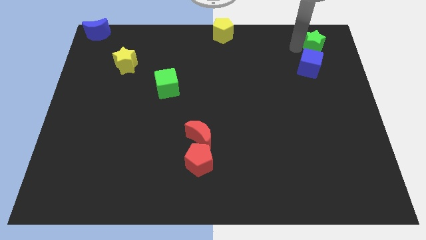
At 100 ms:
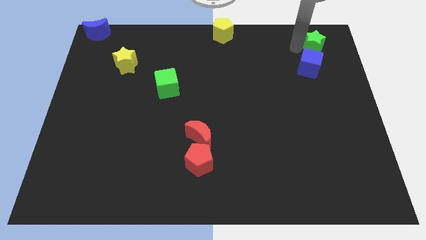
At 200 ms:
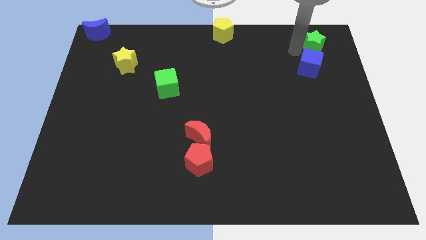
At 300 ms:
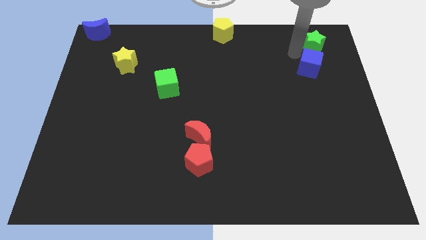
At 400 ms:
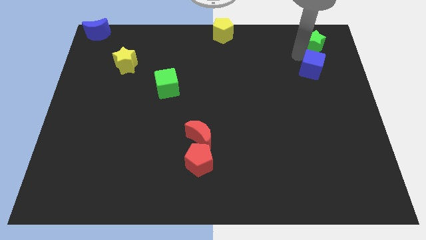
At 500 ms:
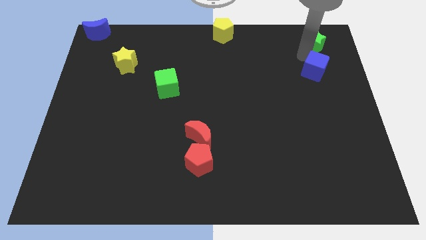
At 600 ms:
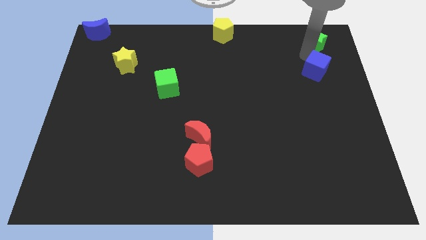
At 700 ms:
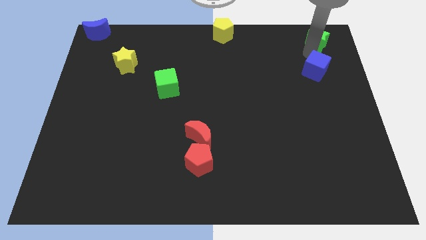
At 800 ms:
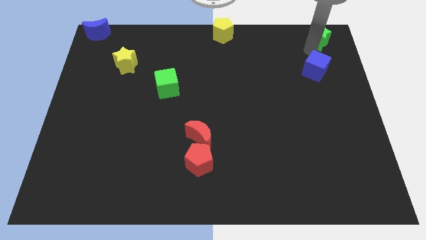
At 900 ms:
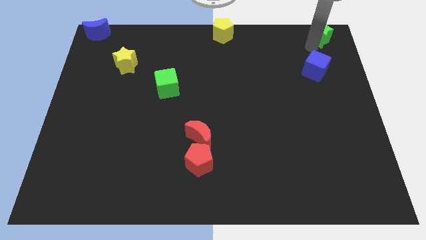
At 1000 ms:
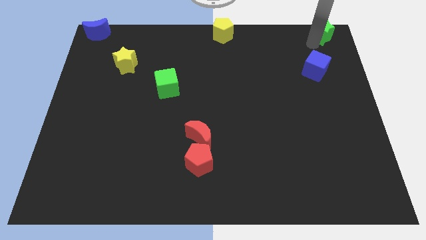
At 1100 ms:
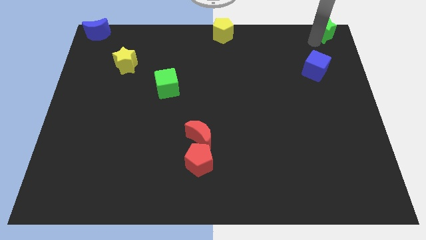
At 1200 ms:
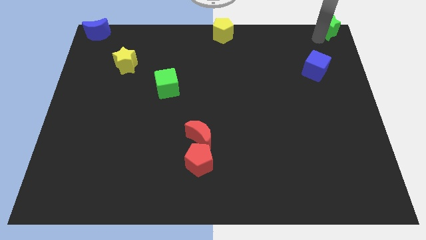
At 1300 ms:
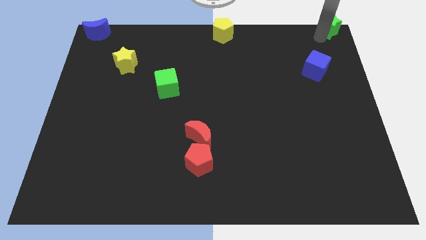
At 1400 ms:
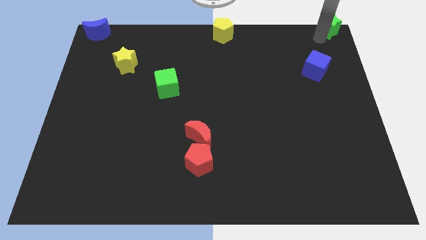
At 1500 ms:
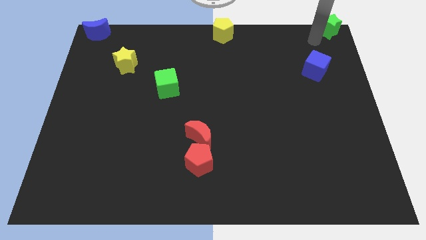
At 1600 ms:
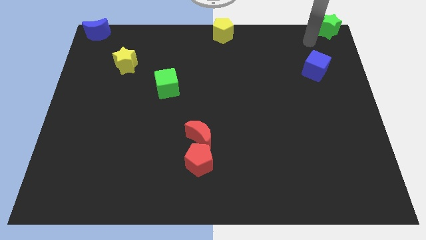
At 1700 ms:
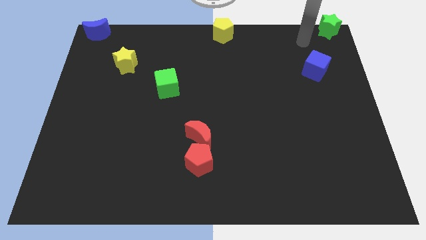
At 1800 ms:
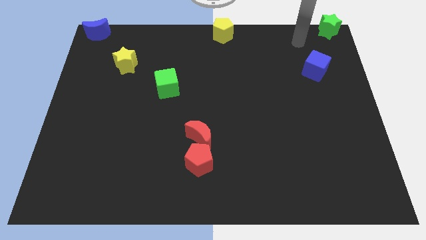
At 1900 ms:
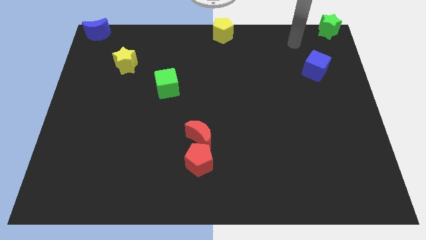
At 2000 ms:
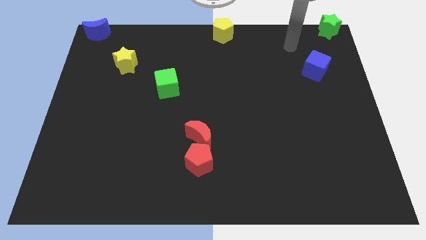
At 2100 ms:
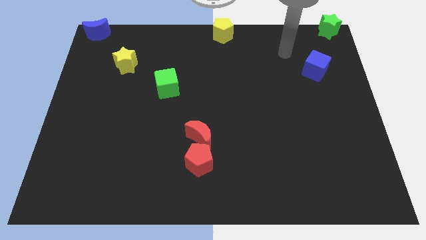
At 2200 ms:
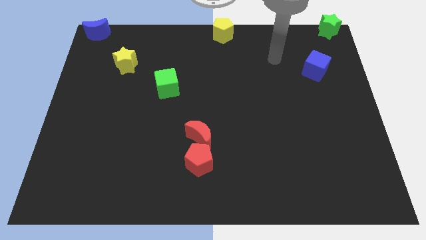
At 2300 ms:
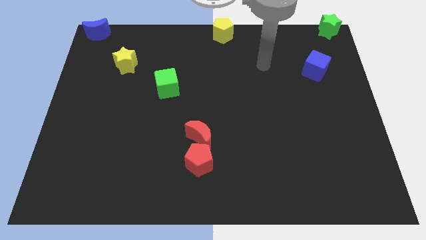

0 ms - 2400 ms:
slide the green star to the top right corner

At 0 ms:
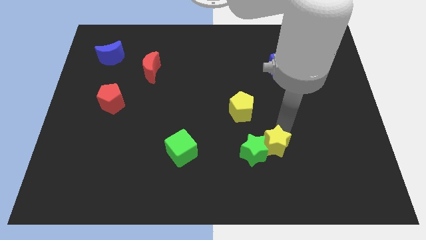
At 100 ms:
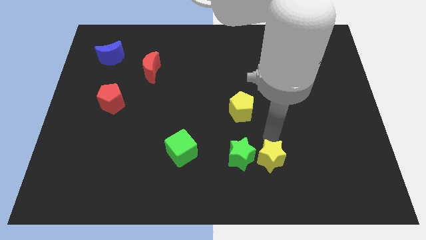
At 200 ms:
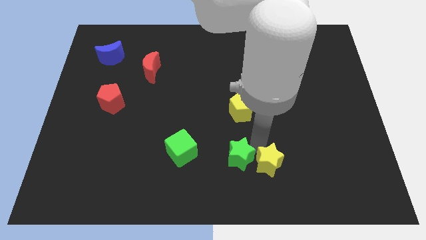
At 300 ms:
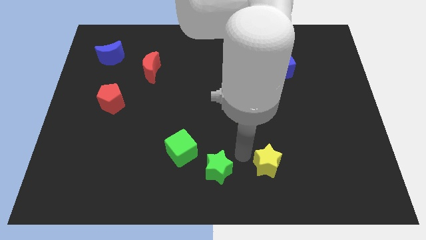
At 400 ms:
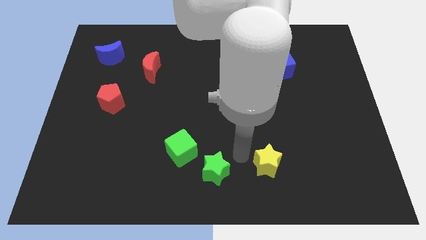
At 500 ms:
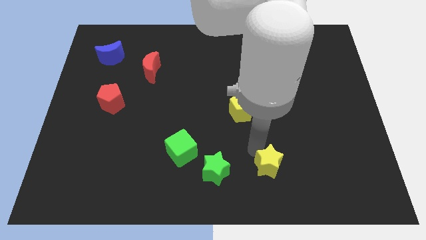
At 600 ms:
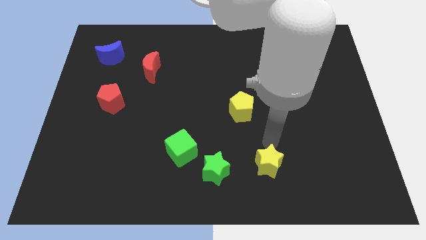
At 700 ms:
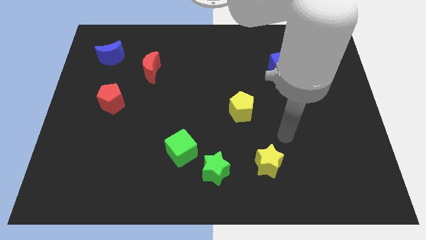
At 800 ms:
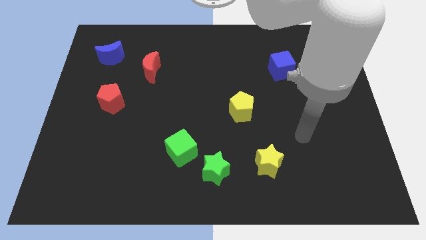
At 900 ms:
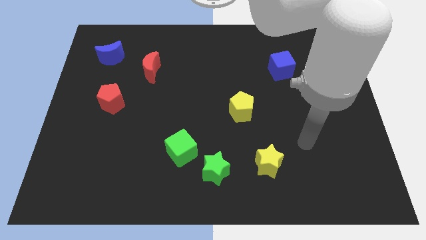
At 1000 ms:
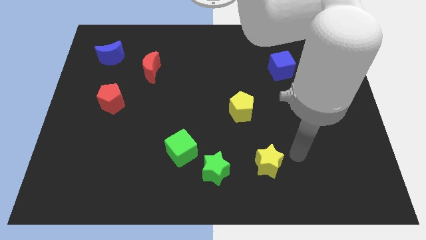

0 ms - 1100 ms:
separate the green and yellow stars

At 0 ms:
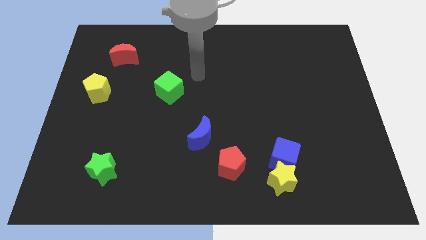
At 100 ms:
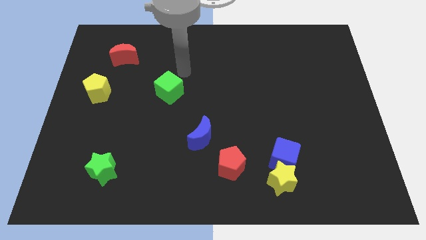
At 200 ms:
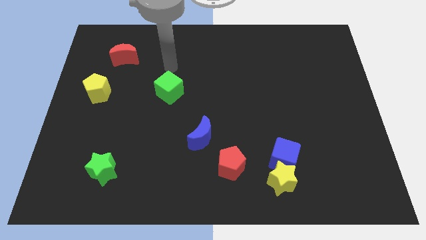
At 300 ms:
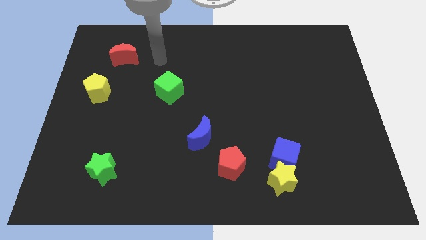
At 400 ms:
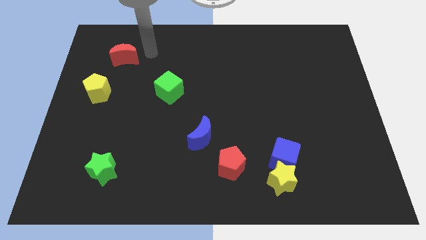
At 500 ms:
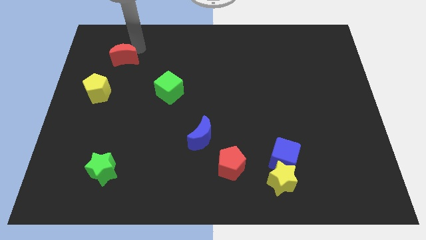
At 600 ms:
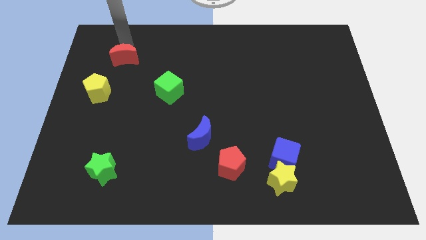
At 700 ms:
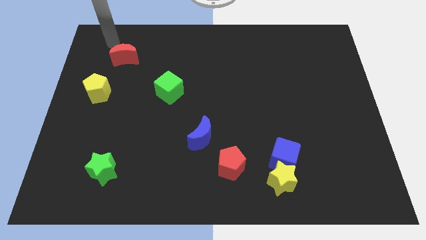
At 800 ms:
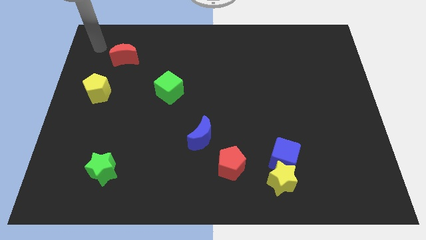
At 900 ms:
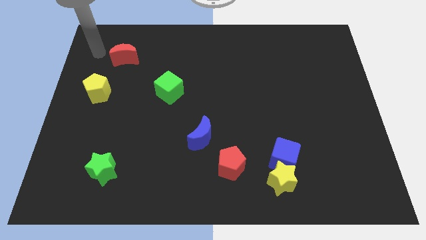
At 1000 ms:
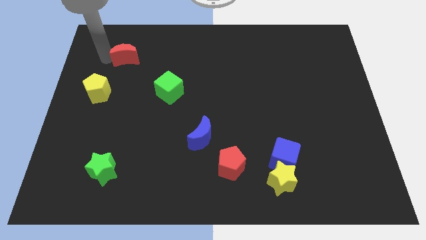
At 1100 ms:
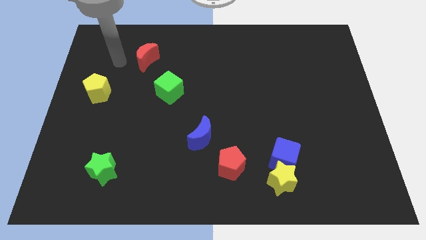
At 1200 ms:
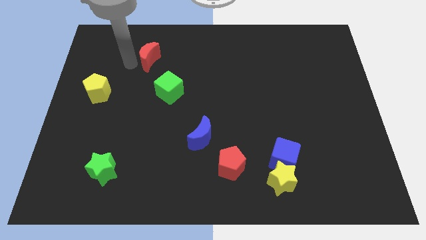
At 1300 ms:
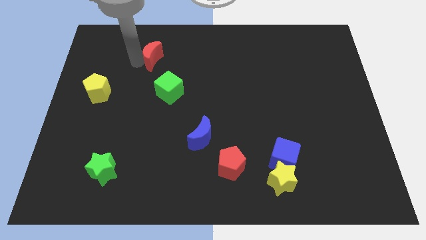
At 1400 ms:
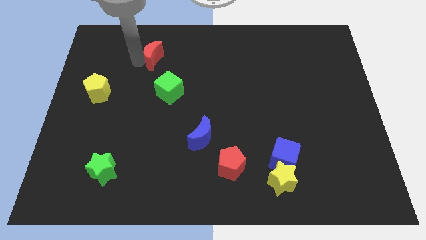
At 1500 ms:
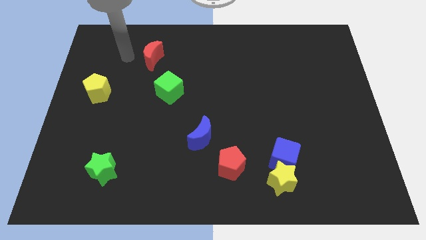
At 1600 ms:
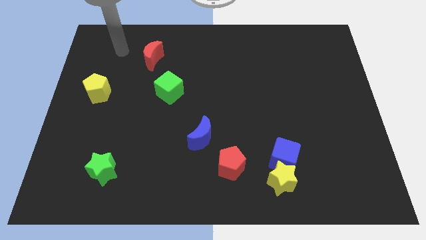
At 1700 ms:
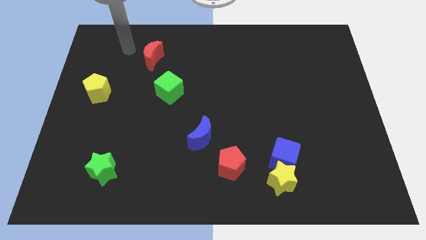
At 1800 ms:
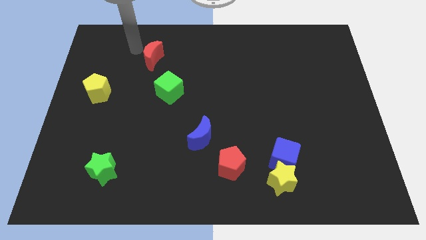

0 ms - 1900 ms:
push the red crescent slightly to the right

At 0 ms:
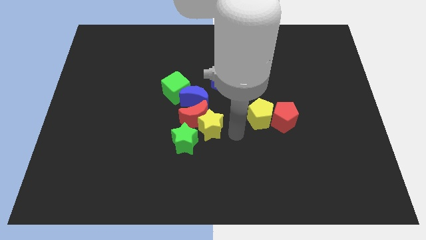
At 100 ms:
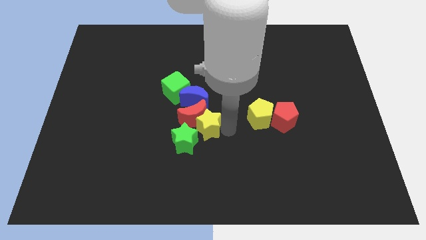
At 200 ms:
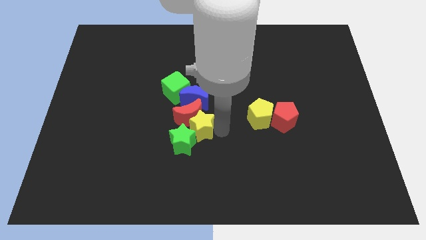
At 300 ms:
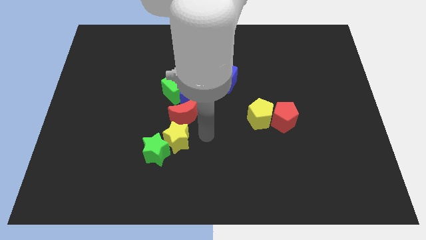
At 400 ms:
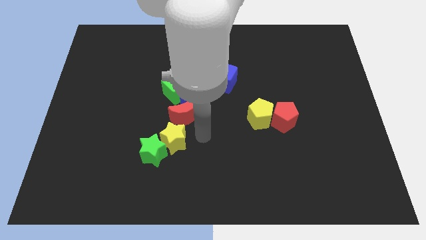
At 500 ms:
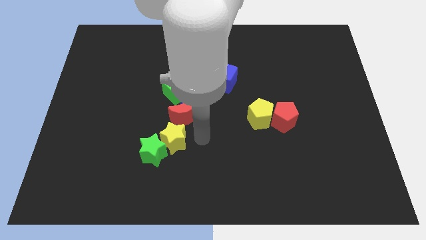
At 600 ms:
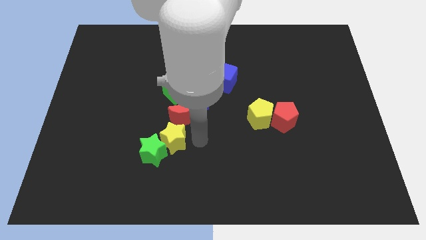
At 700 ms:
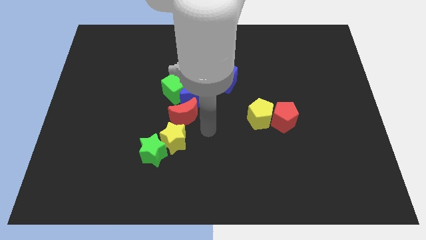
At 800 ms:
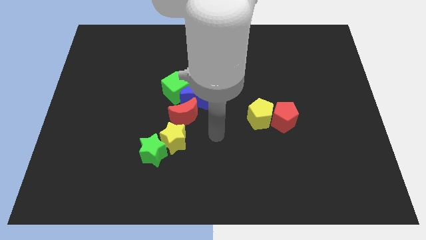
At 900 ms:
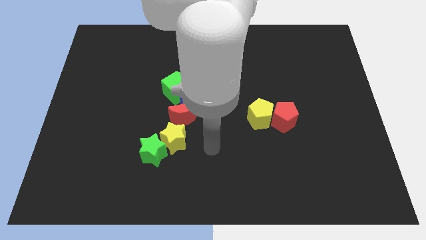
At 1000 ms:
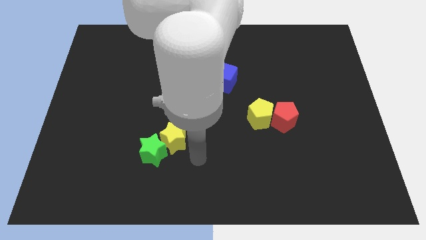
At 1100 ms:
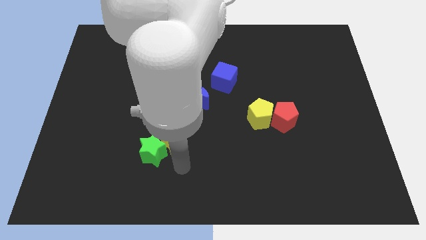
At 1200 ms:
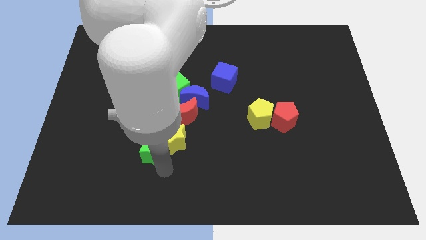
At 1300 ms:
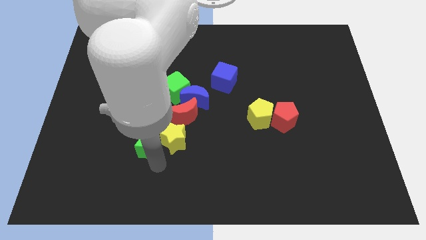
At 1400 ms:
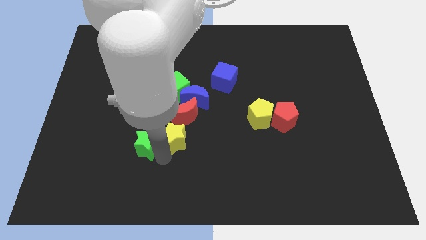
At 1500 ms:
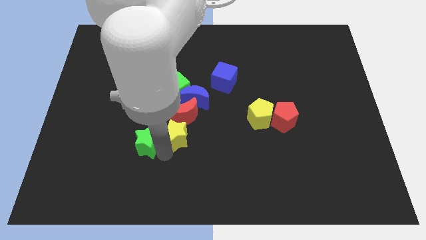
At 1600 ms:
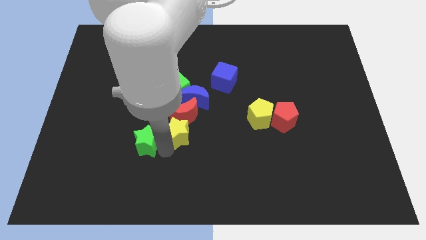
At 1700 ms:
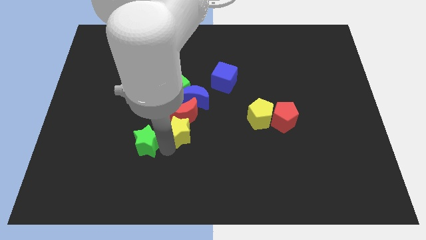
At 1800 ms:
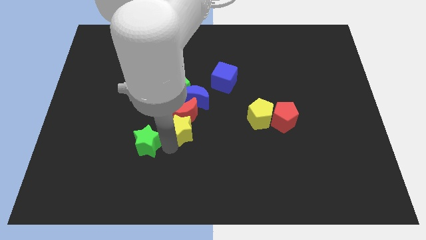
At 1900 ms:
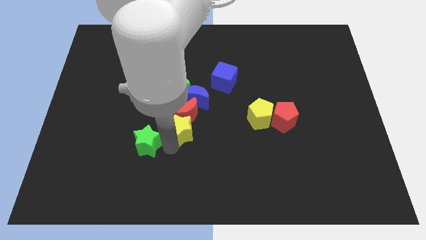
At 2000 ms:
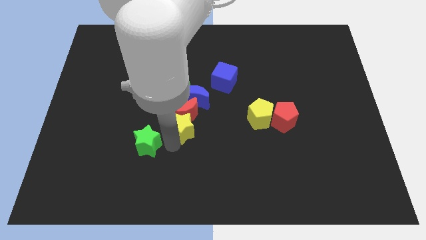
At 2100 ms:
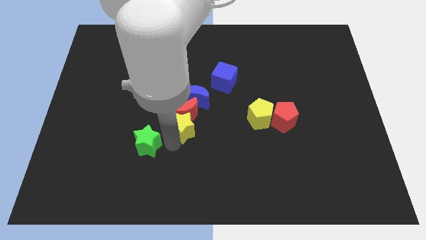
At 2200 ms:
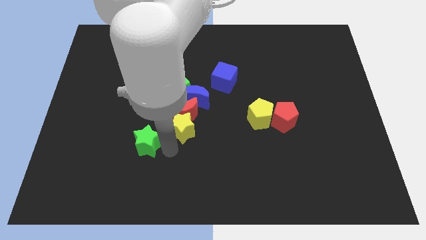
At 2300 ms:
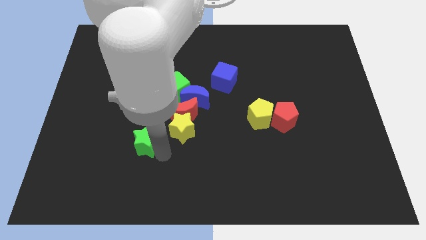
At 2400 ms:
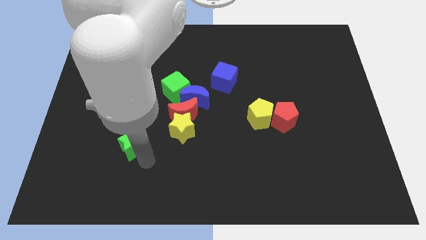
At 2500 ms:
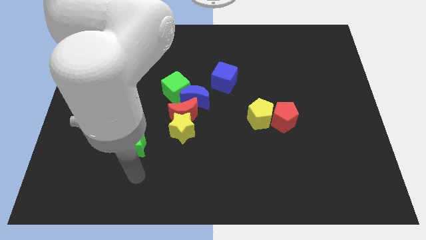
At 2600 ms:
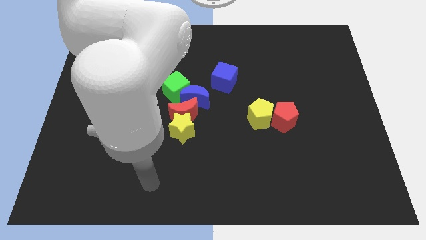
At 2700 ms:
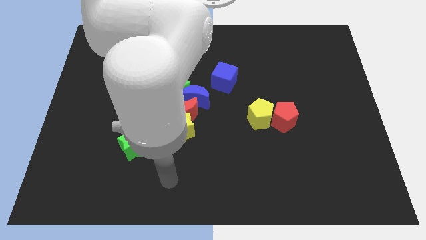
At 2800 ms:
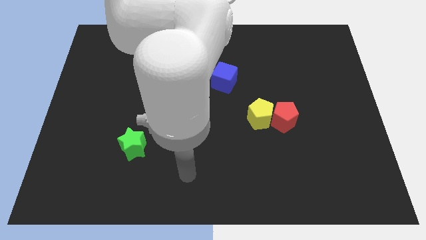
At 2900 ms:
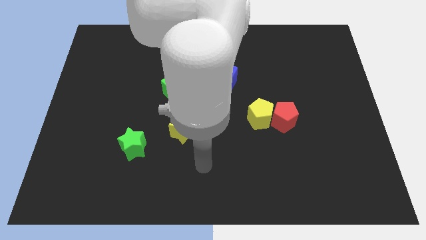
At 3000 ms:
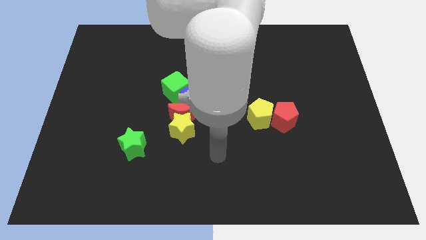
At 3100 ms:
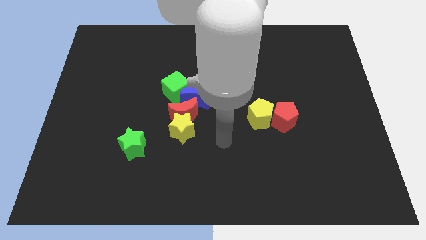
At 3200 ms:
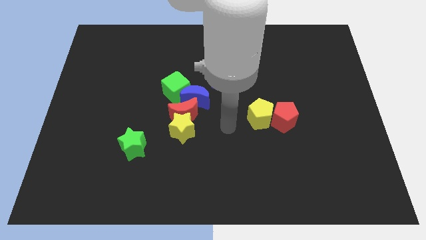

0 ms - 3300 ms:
separate the yellow and green stars from each other
